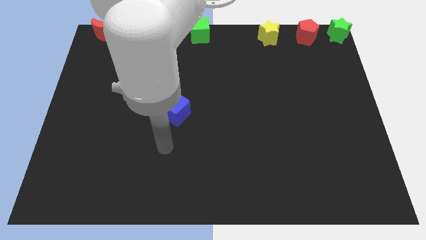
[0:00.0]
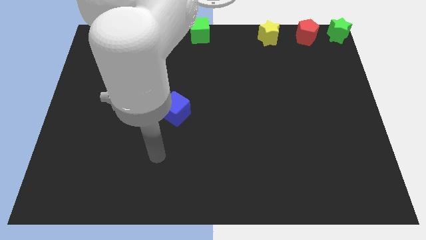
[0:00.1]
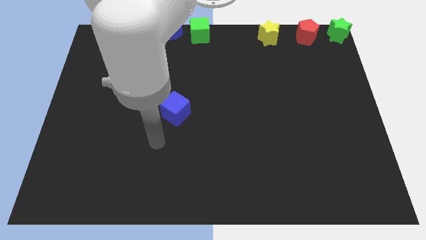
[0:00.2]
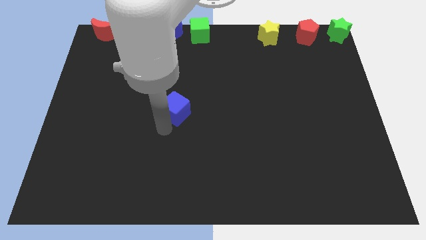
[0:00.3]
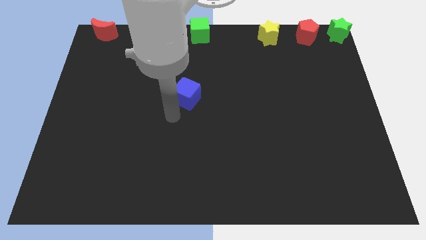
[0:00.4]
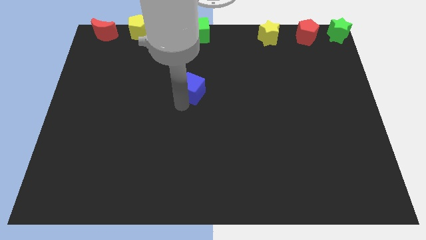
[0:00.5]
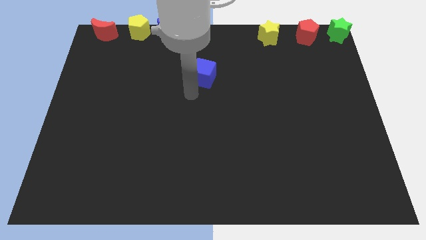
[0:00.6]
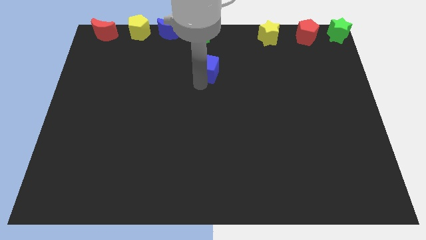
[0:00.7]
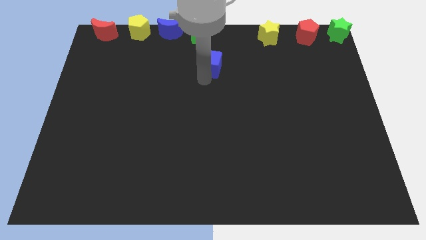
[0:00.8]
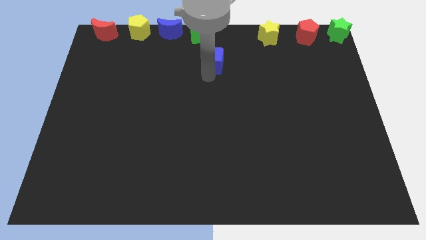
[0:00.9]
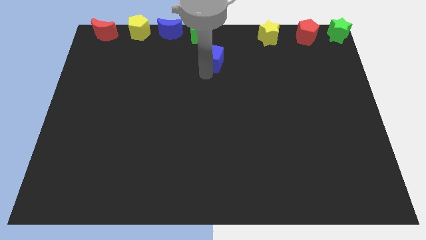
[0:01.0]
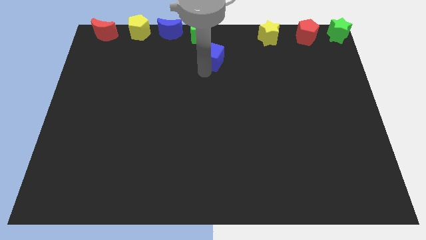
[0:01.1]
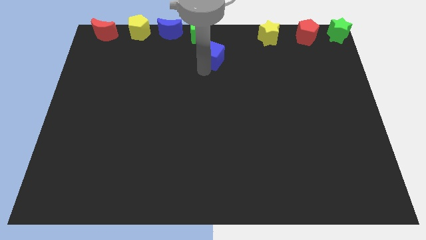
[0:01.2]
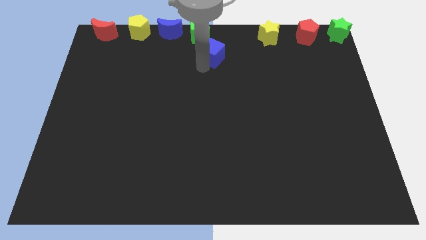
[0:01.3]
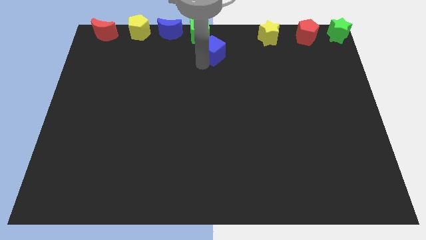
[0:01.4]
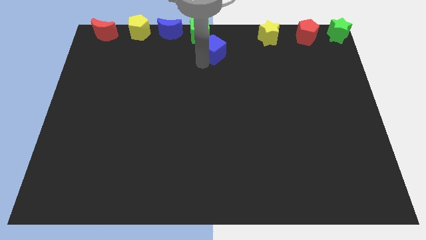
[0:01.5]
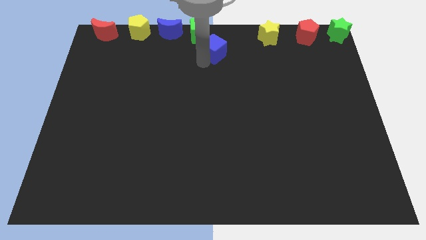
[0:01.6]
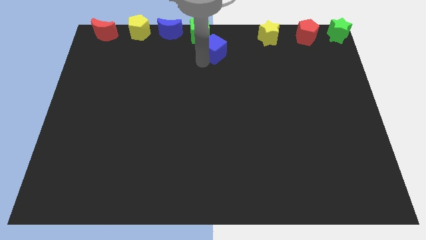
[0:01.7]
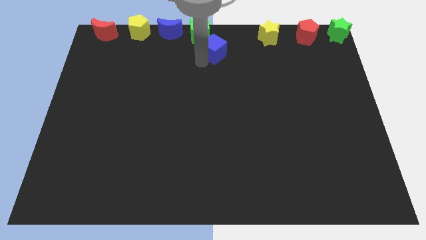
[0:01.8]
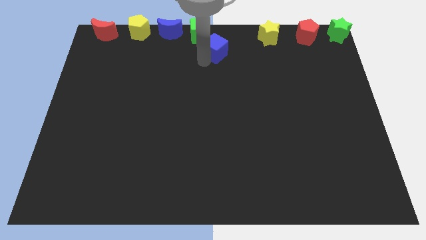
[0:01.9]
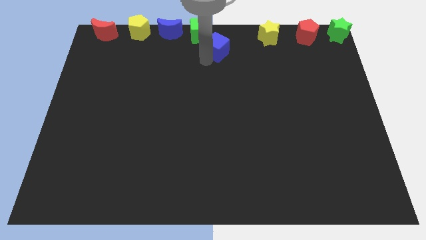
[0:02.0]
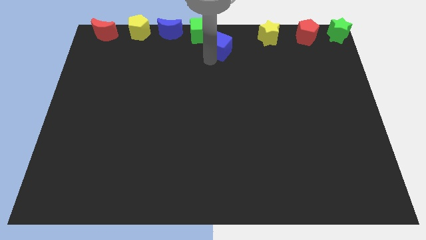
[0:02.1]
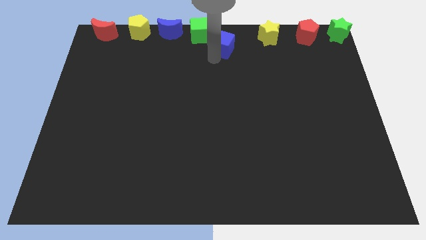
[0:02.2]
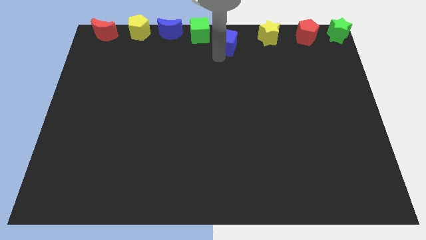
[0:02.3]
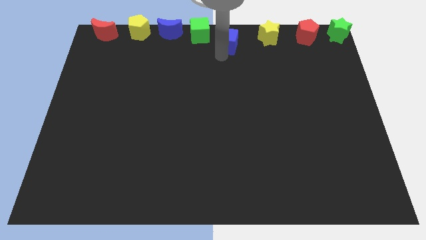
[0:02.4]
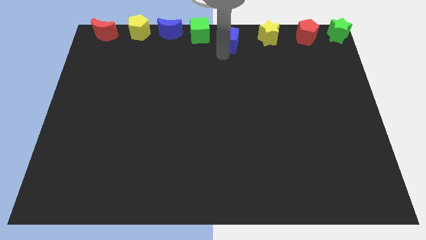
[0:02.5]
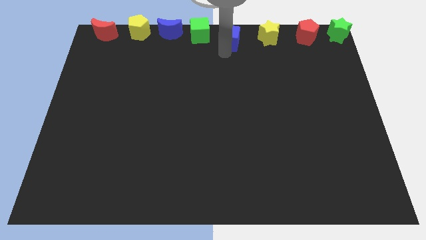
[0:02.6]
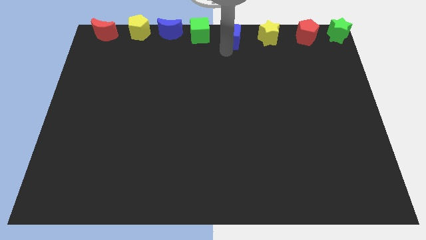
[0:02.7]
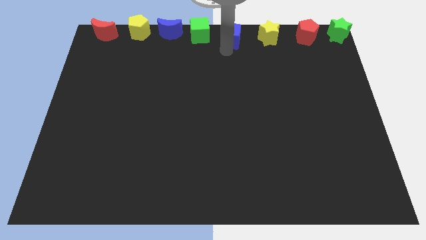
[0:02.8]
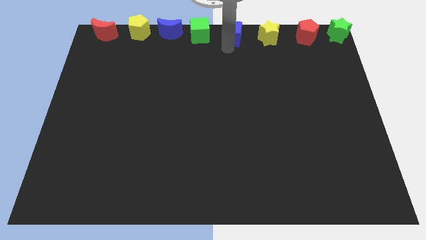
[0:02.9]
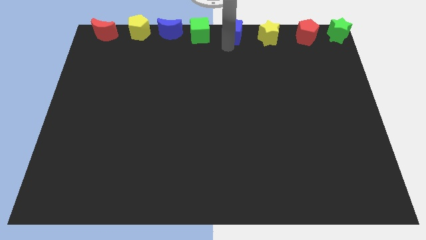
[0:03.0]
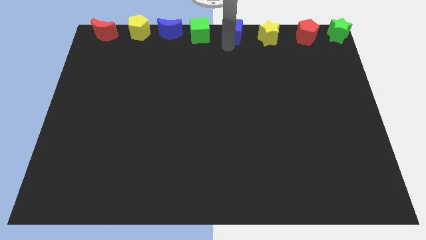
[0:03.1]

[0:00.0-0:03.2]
move the blue cube horizontally in between the green cube and yellow star

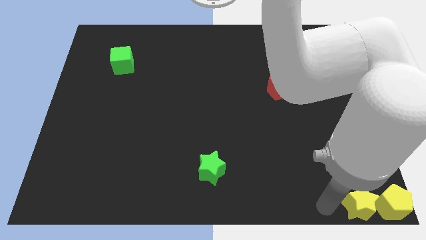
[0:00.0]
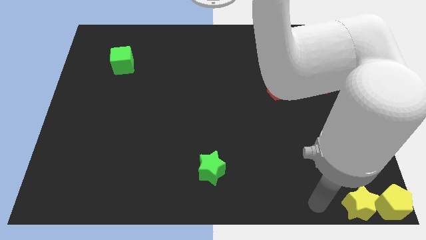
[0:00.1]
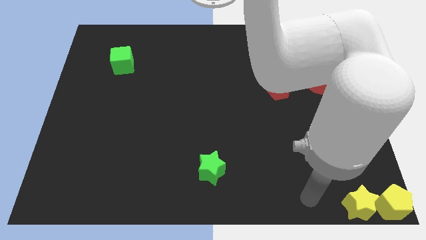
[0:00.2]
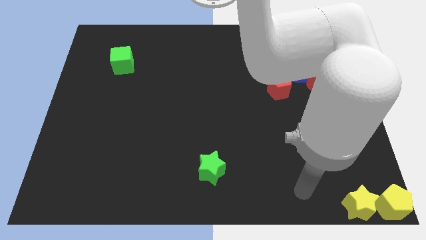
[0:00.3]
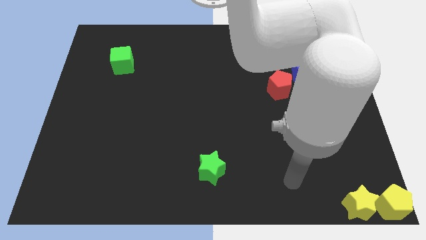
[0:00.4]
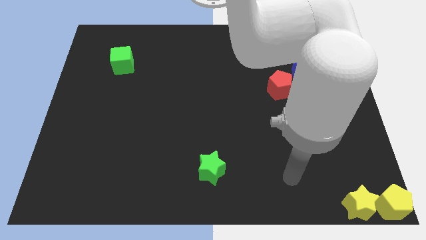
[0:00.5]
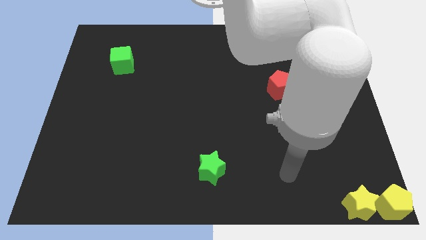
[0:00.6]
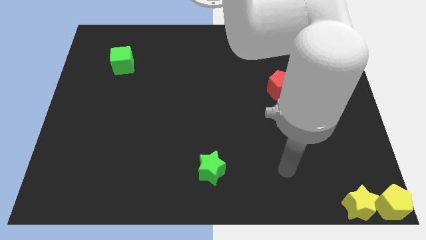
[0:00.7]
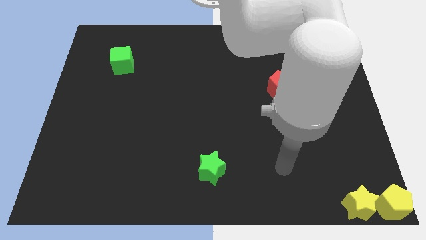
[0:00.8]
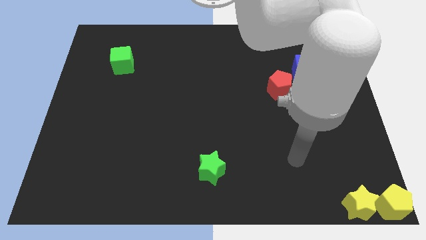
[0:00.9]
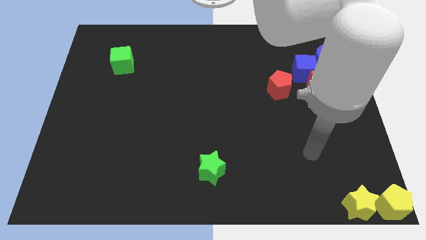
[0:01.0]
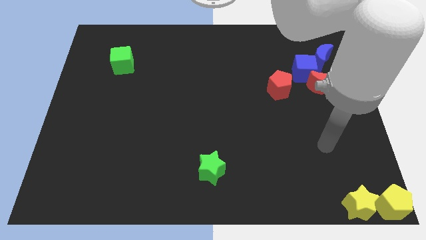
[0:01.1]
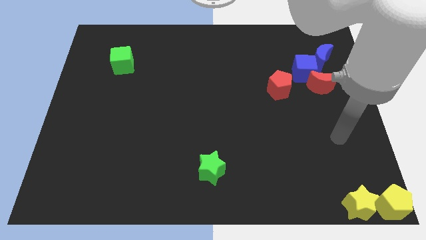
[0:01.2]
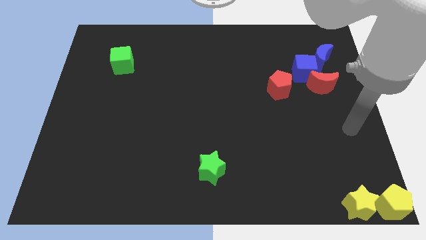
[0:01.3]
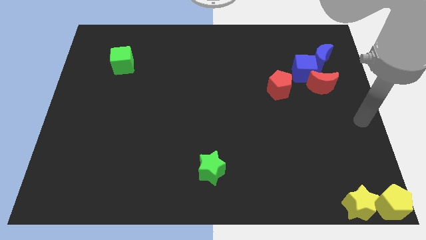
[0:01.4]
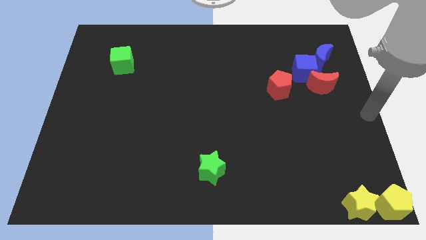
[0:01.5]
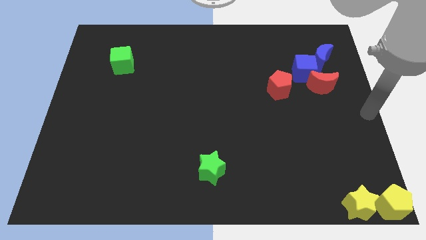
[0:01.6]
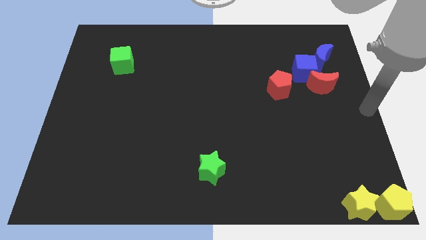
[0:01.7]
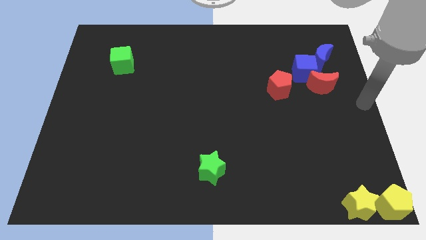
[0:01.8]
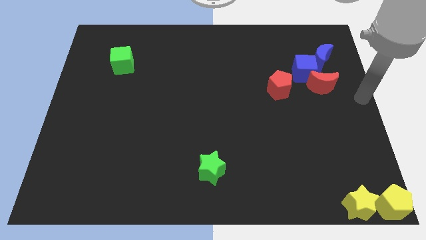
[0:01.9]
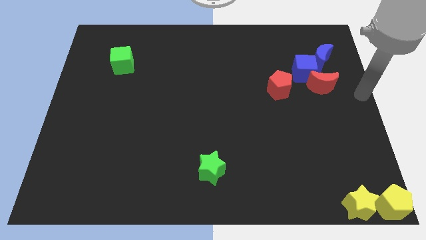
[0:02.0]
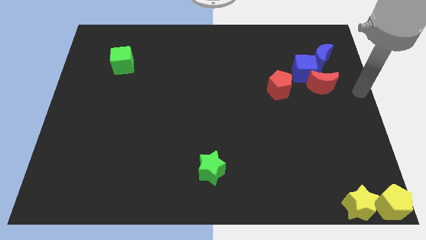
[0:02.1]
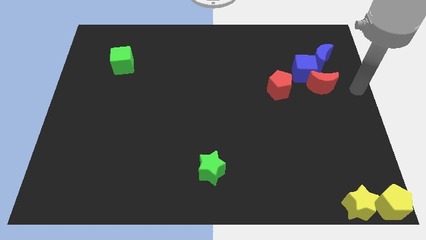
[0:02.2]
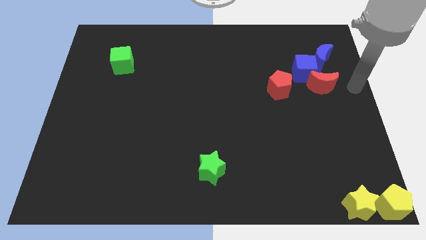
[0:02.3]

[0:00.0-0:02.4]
go away from the yellow star

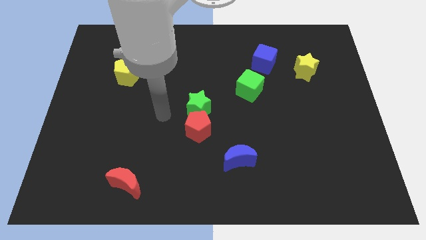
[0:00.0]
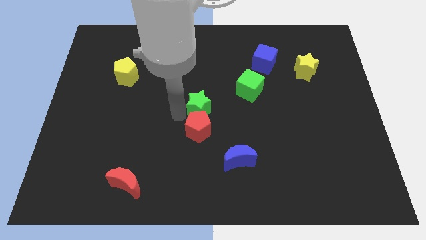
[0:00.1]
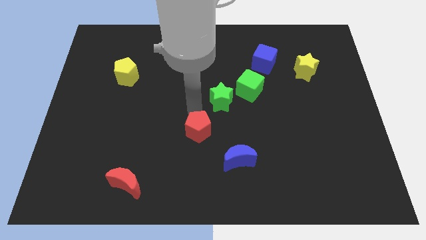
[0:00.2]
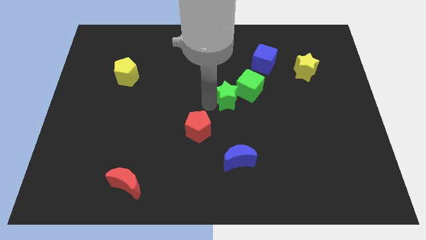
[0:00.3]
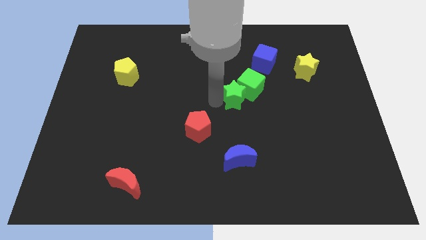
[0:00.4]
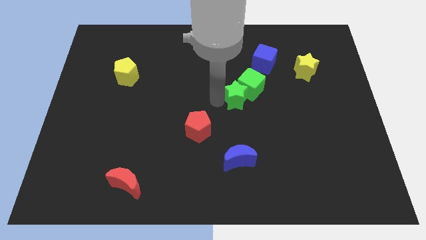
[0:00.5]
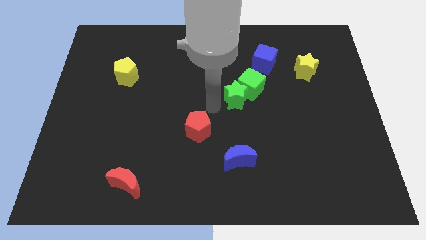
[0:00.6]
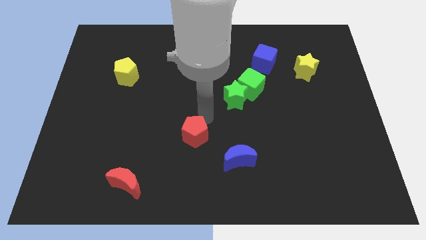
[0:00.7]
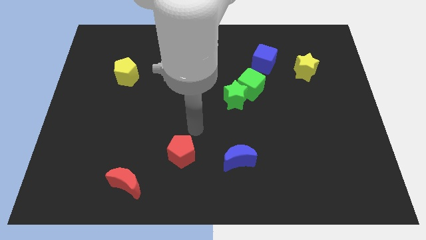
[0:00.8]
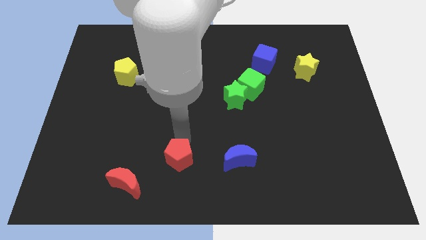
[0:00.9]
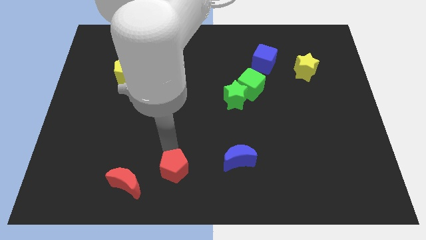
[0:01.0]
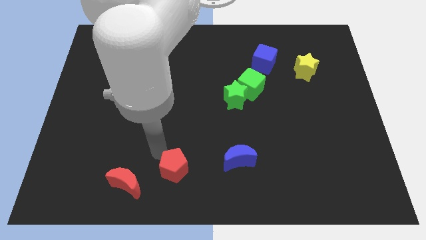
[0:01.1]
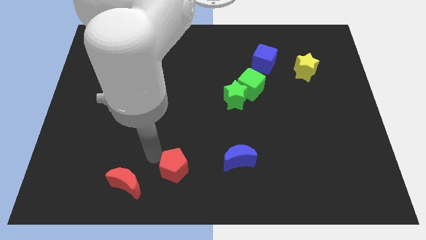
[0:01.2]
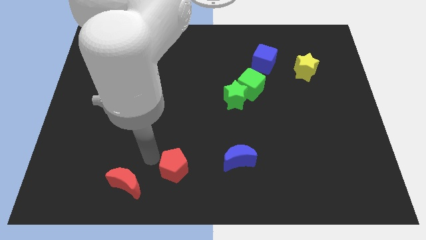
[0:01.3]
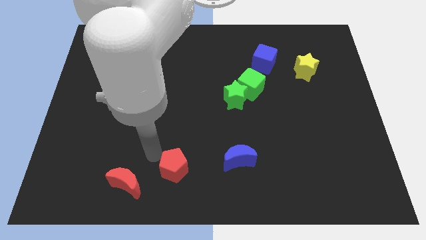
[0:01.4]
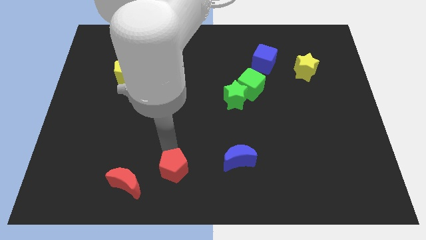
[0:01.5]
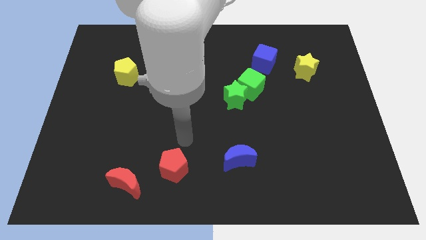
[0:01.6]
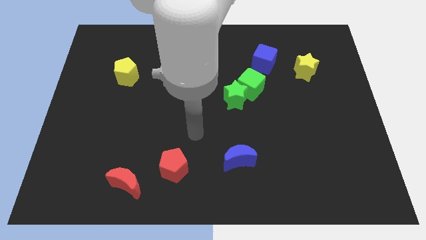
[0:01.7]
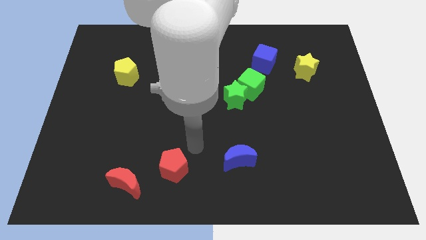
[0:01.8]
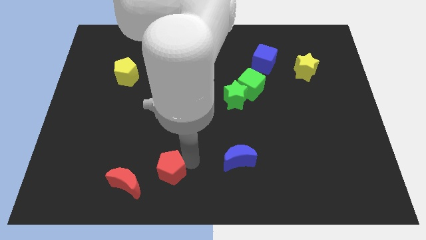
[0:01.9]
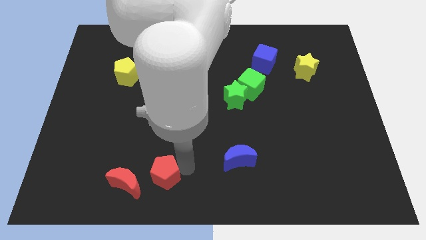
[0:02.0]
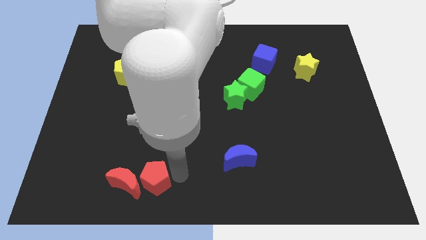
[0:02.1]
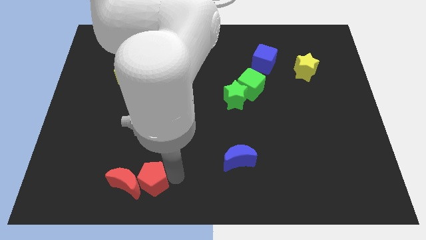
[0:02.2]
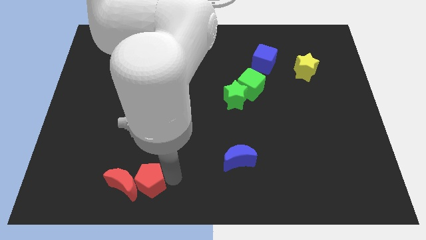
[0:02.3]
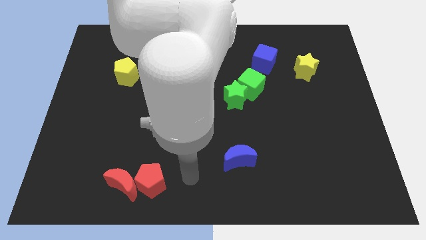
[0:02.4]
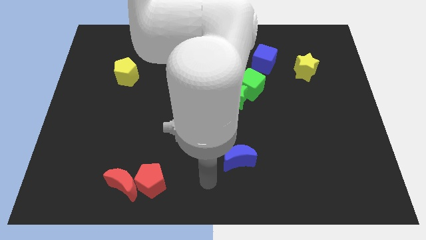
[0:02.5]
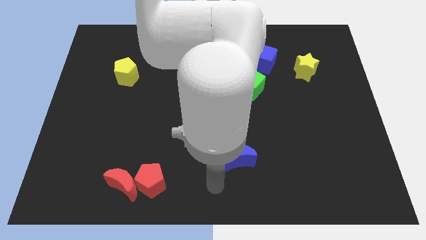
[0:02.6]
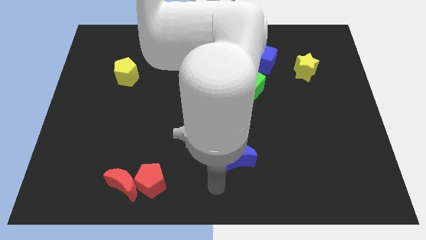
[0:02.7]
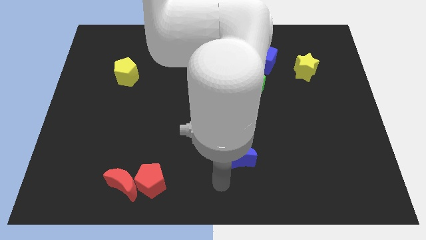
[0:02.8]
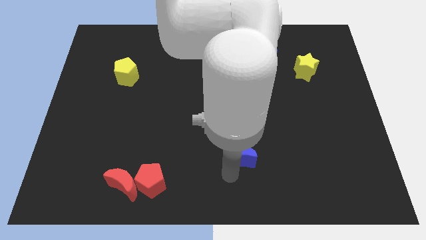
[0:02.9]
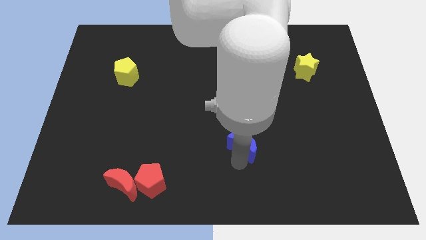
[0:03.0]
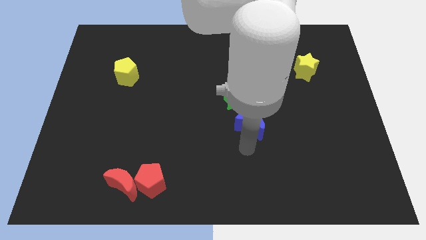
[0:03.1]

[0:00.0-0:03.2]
place the red pentagon into the red crescent
